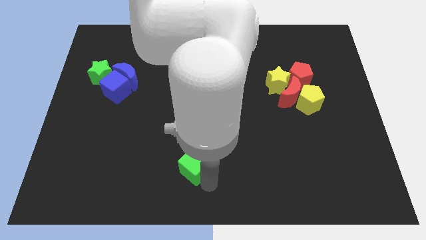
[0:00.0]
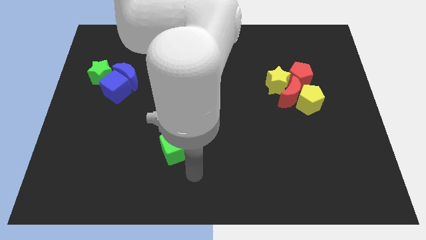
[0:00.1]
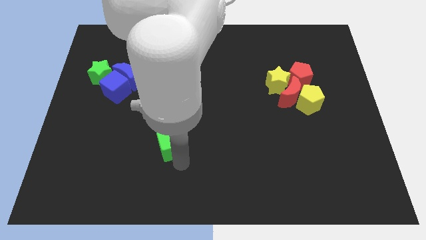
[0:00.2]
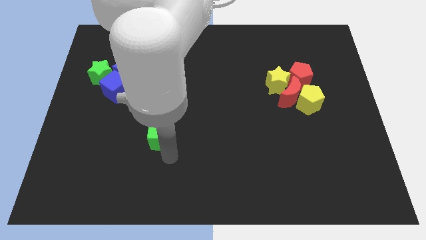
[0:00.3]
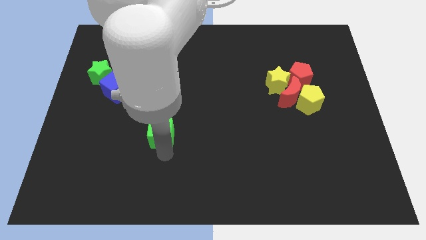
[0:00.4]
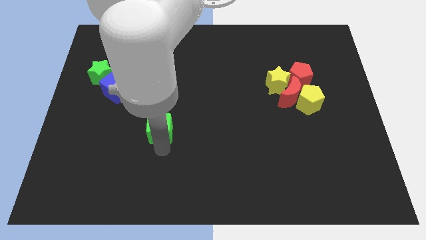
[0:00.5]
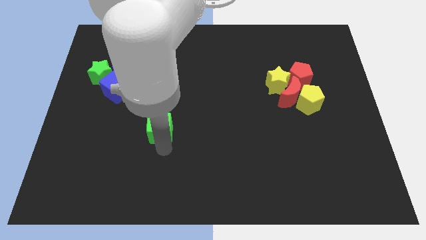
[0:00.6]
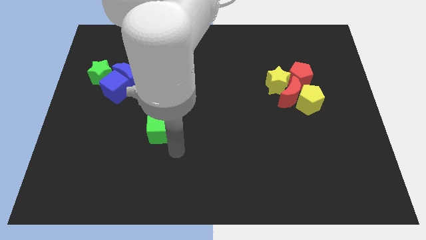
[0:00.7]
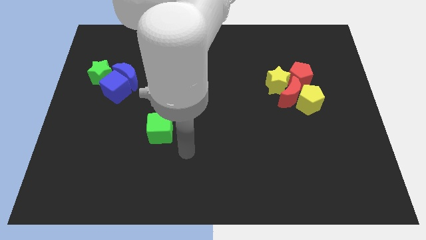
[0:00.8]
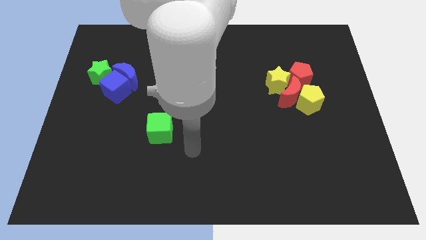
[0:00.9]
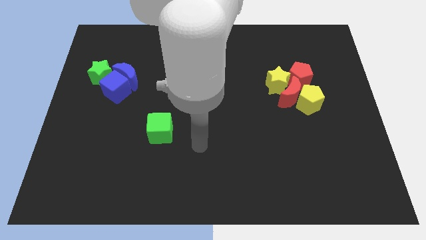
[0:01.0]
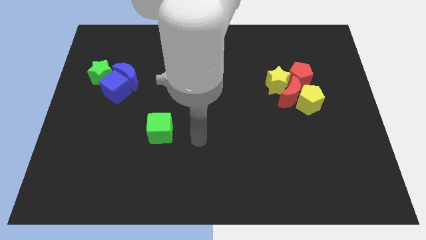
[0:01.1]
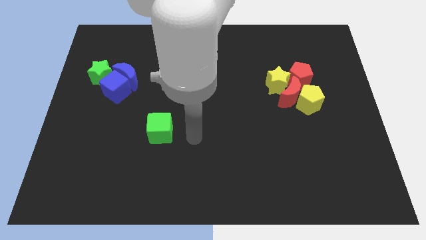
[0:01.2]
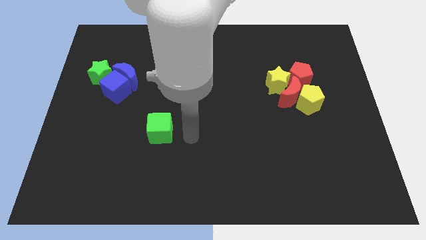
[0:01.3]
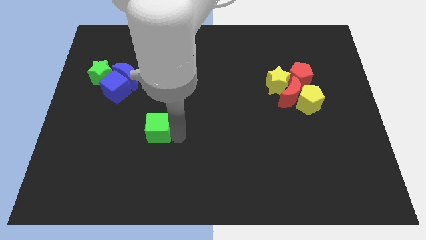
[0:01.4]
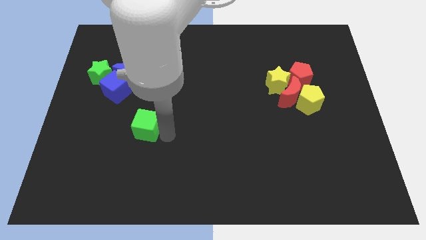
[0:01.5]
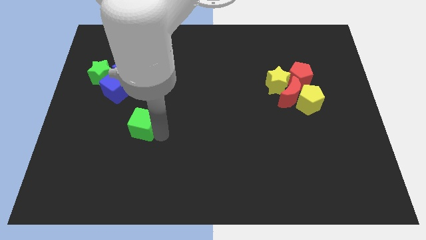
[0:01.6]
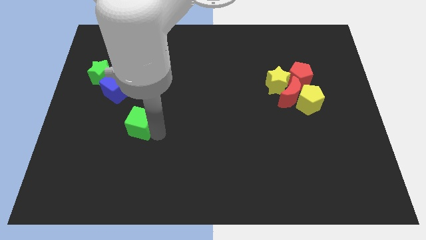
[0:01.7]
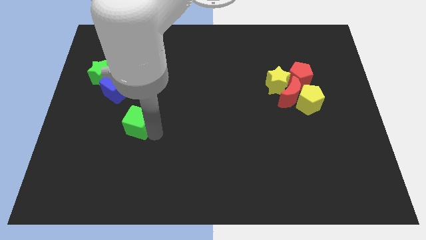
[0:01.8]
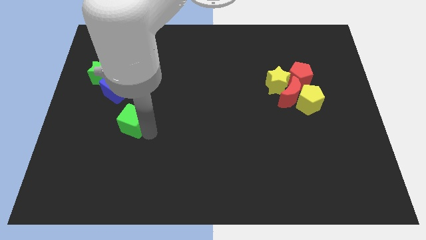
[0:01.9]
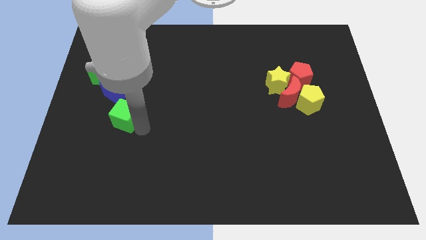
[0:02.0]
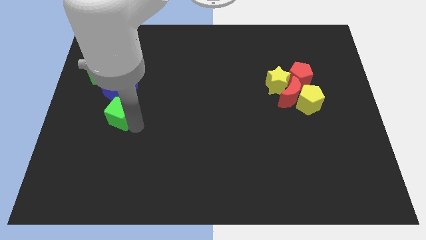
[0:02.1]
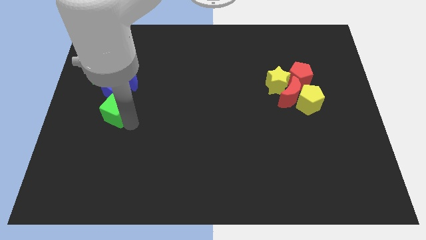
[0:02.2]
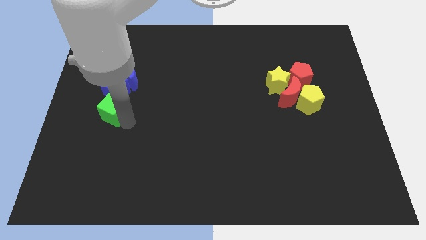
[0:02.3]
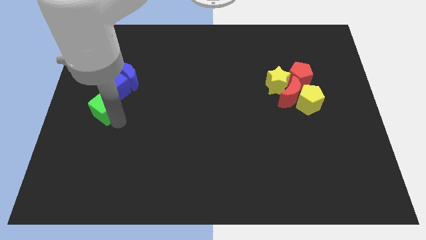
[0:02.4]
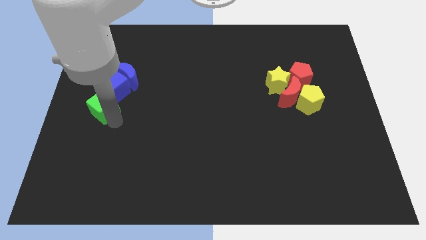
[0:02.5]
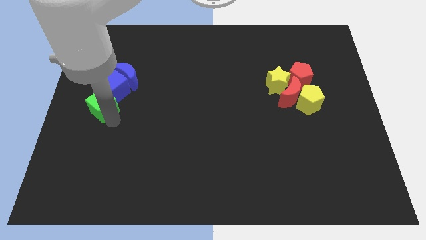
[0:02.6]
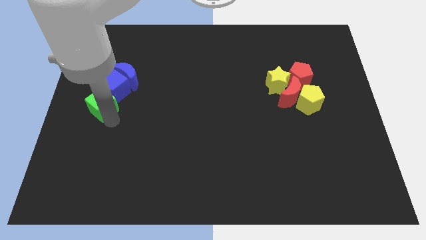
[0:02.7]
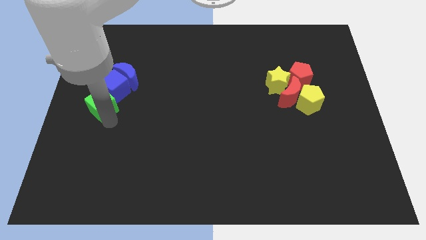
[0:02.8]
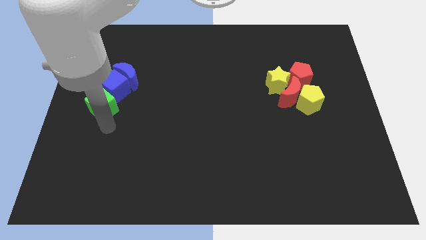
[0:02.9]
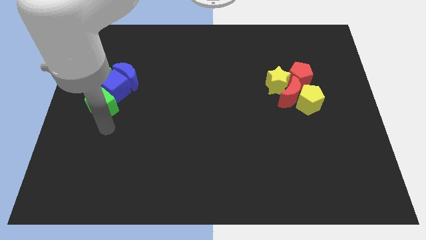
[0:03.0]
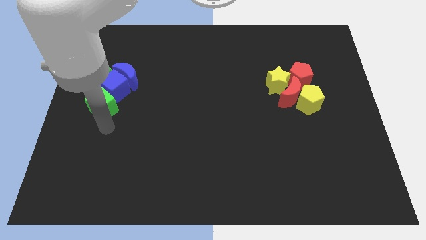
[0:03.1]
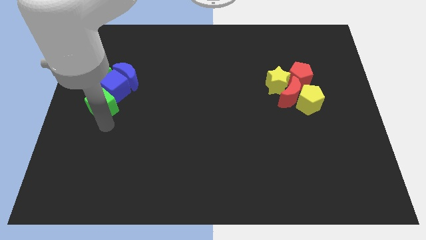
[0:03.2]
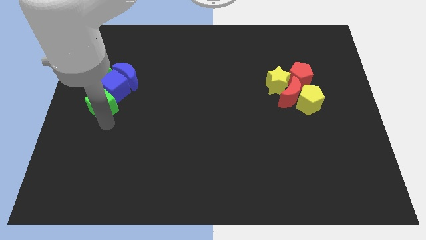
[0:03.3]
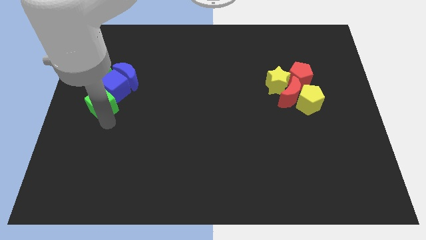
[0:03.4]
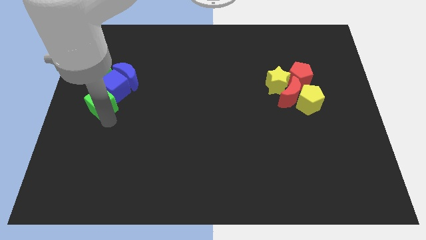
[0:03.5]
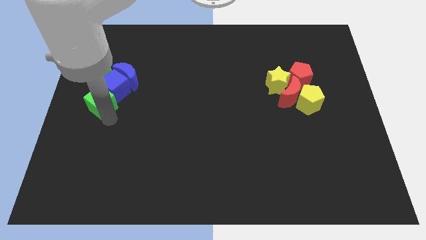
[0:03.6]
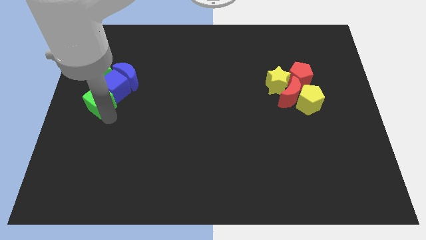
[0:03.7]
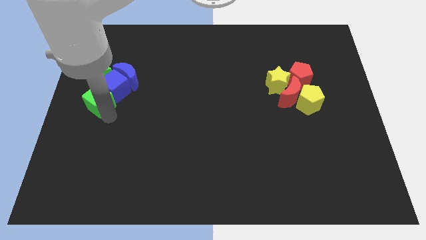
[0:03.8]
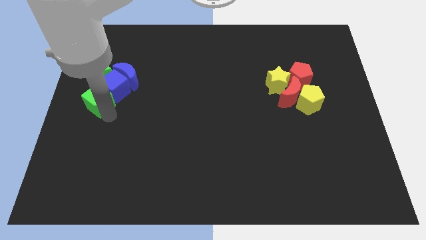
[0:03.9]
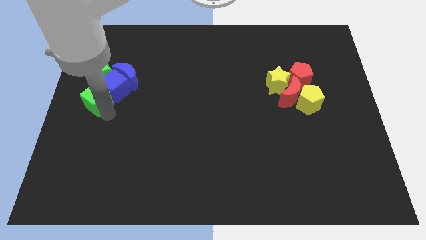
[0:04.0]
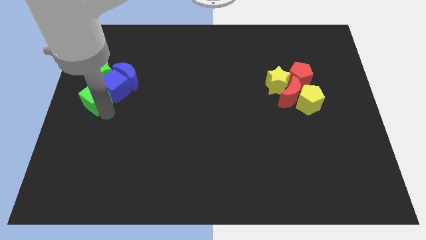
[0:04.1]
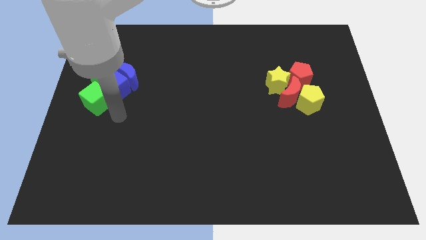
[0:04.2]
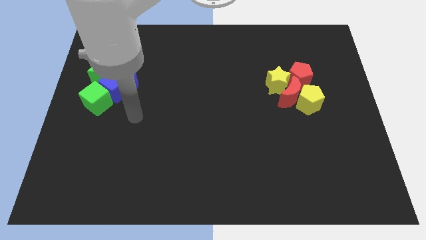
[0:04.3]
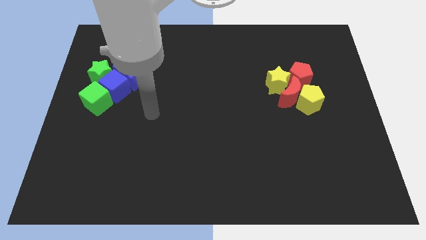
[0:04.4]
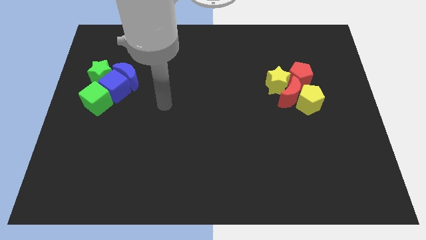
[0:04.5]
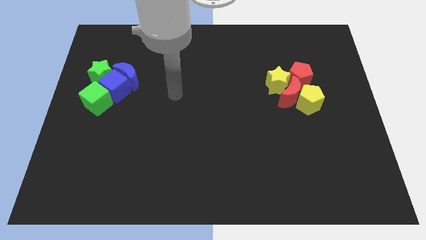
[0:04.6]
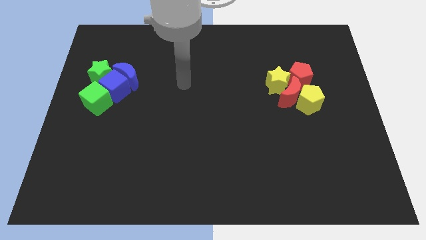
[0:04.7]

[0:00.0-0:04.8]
place the green cube to left side of blue cube

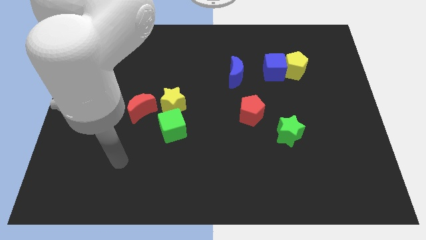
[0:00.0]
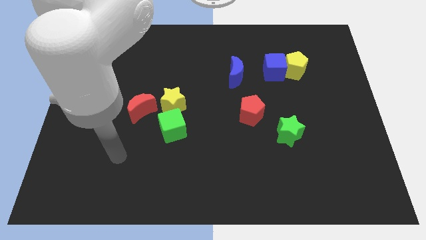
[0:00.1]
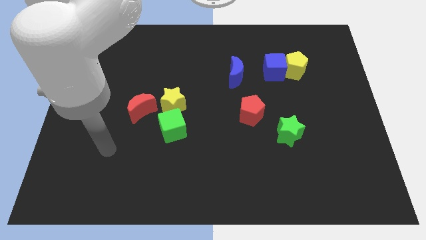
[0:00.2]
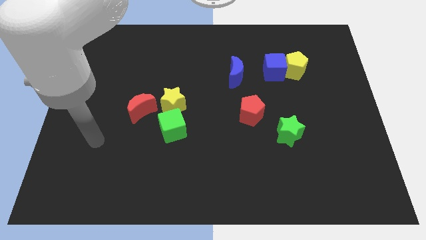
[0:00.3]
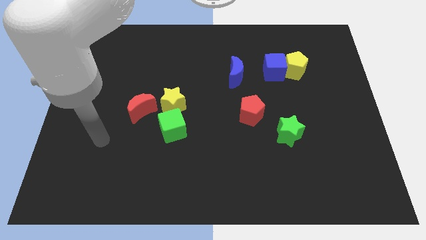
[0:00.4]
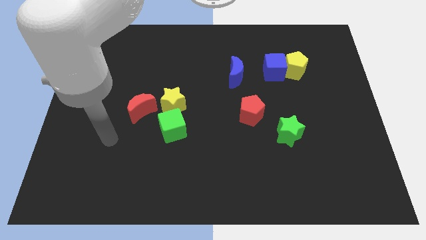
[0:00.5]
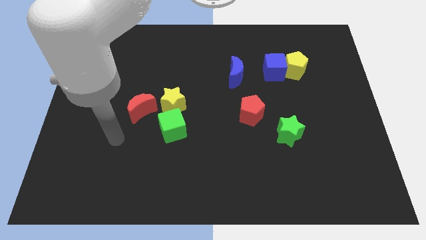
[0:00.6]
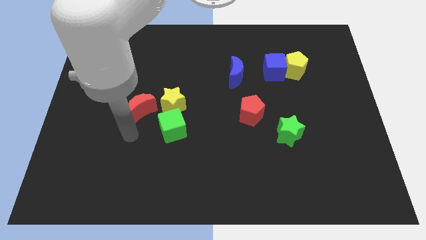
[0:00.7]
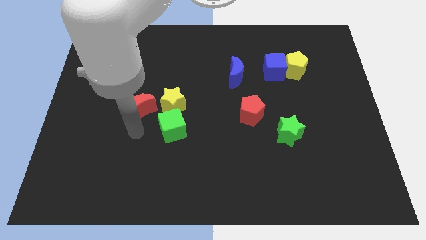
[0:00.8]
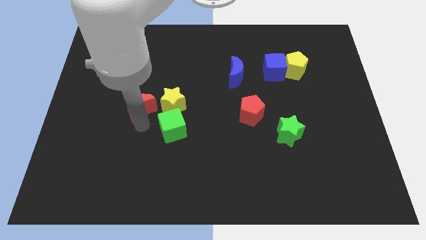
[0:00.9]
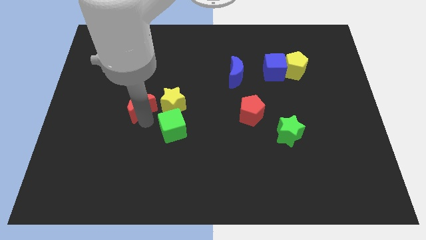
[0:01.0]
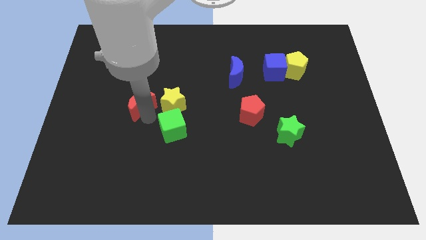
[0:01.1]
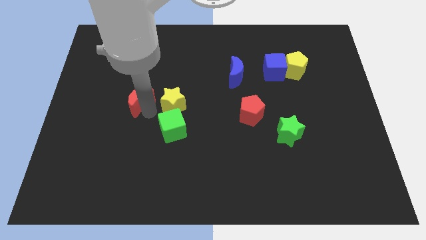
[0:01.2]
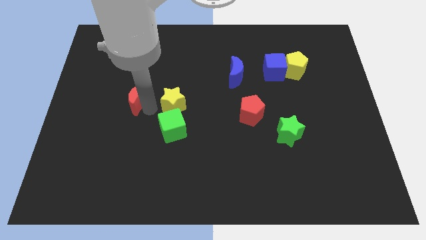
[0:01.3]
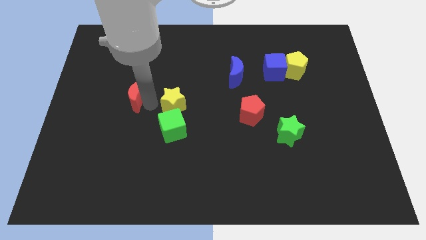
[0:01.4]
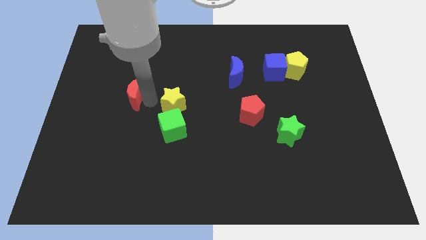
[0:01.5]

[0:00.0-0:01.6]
slightly move the red pentagon to the top side

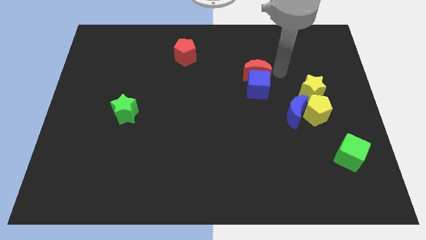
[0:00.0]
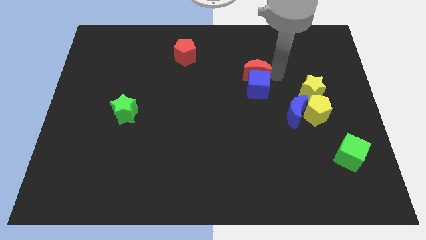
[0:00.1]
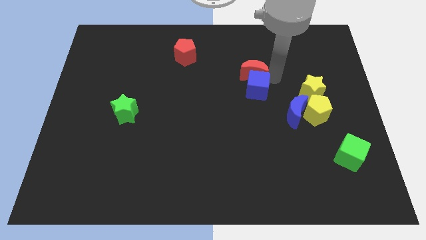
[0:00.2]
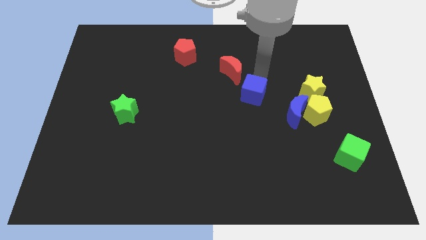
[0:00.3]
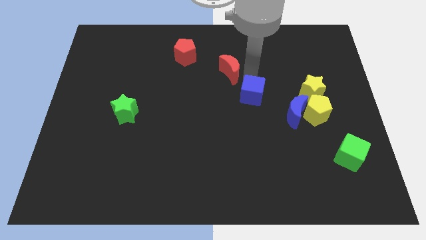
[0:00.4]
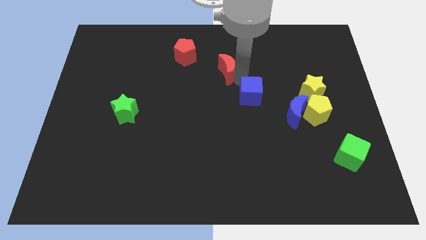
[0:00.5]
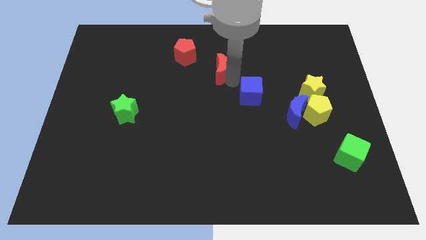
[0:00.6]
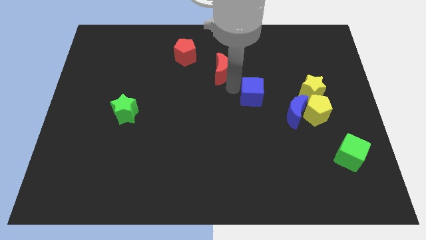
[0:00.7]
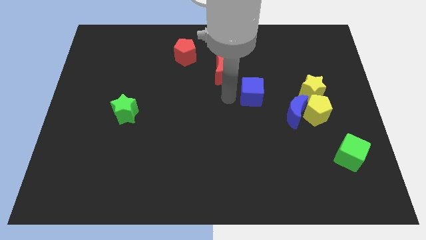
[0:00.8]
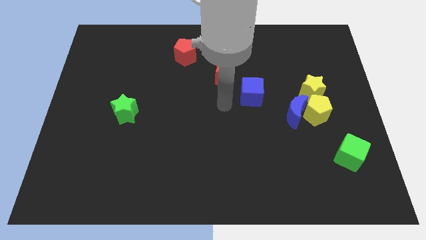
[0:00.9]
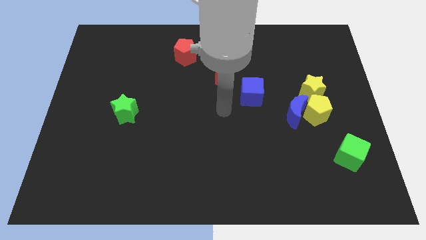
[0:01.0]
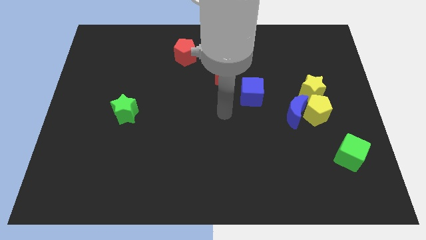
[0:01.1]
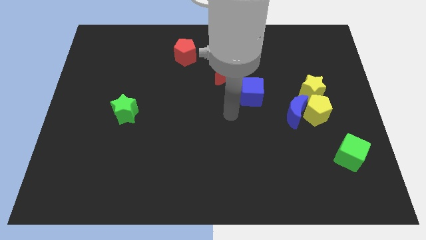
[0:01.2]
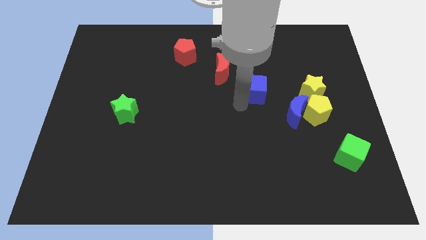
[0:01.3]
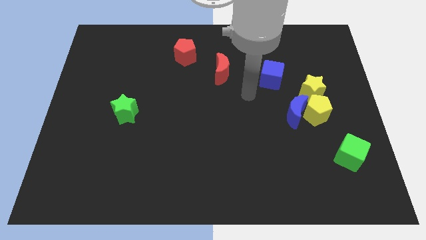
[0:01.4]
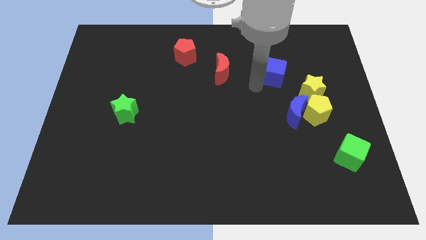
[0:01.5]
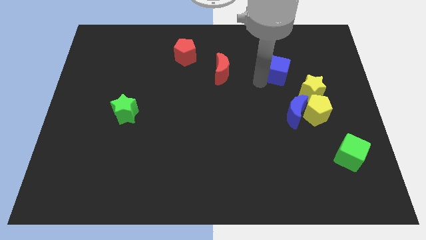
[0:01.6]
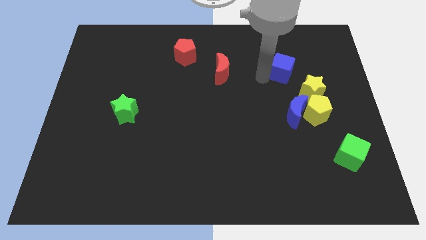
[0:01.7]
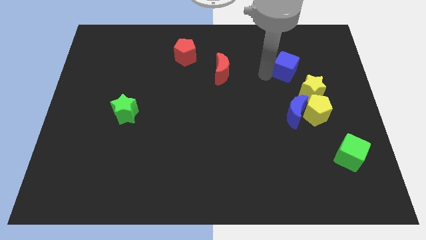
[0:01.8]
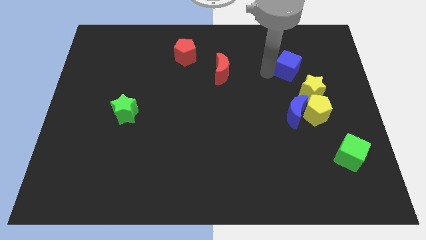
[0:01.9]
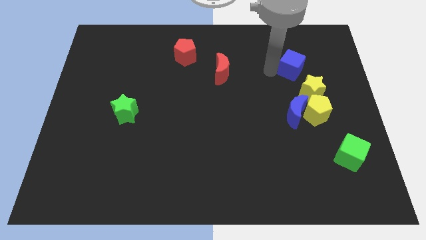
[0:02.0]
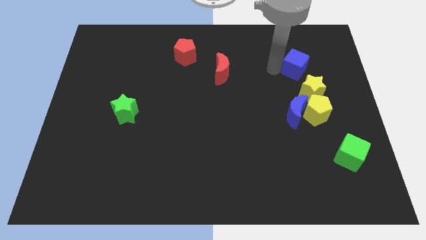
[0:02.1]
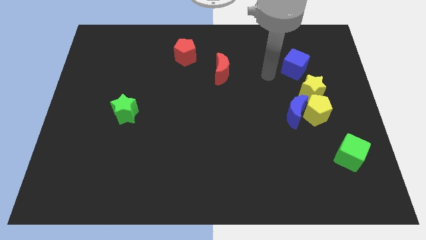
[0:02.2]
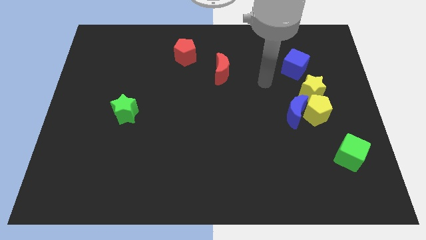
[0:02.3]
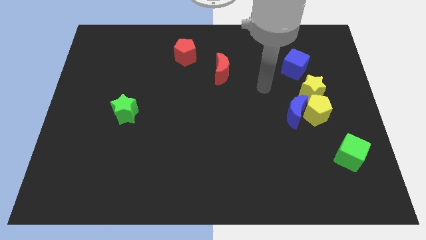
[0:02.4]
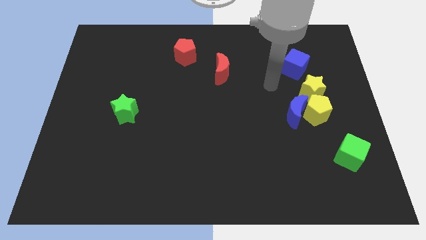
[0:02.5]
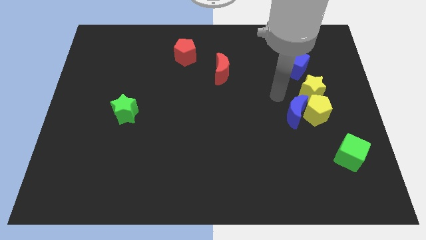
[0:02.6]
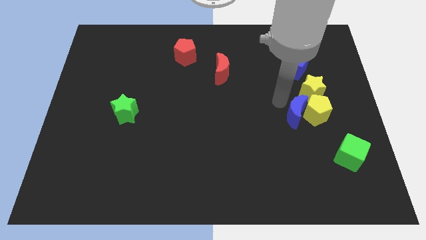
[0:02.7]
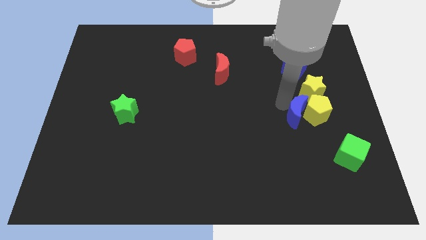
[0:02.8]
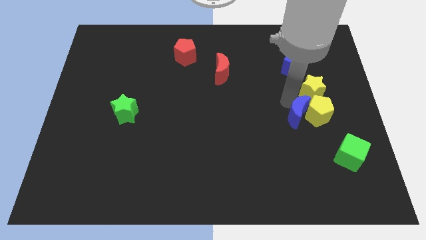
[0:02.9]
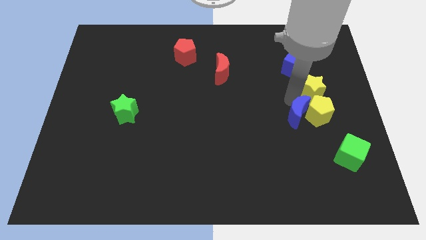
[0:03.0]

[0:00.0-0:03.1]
move blue cube to the top left of yellow star
